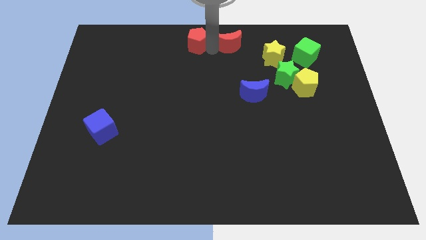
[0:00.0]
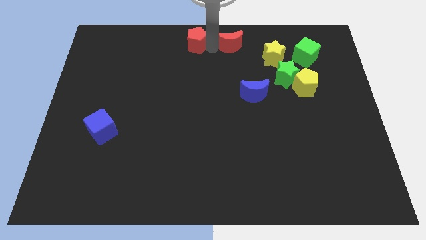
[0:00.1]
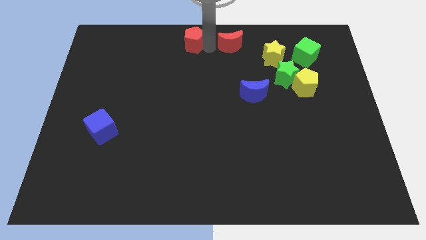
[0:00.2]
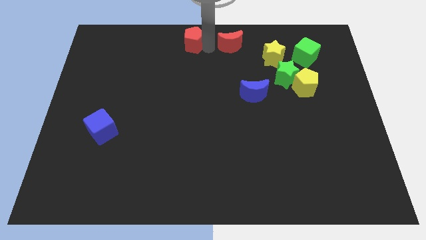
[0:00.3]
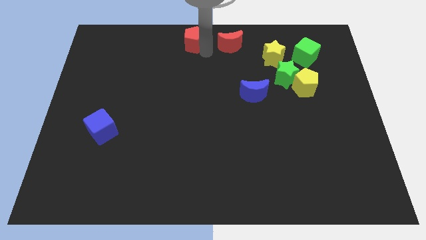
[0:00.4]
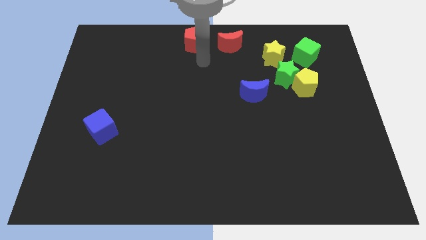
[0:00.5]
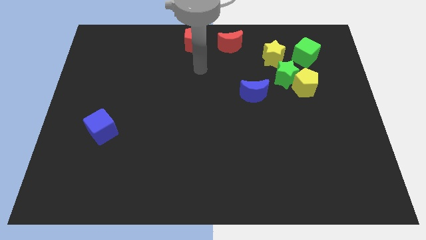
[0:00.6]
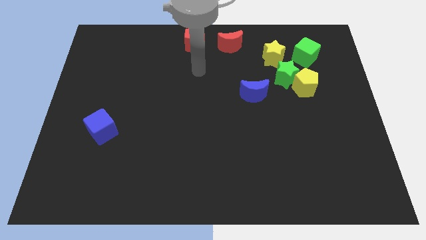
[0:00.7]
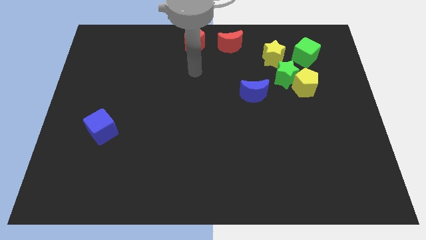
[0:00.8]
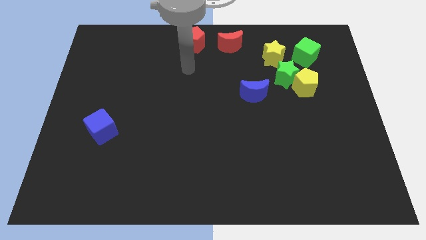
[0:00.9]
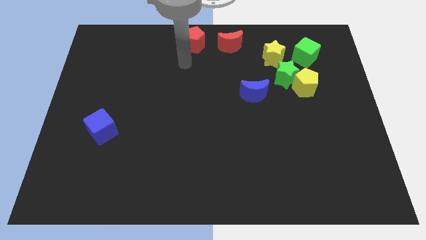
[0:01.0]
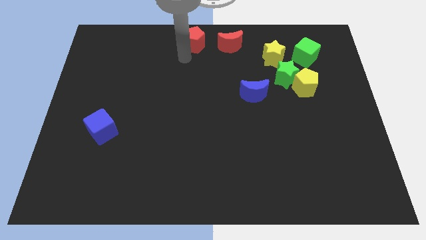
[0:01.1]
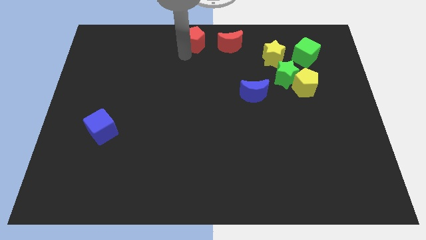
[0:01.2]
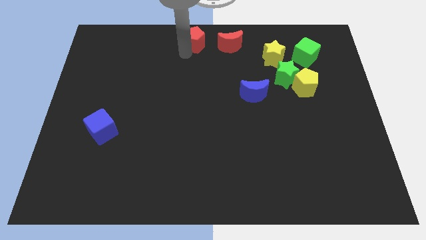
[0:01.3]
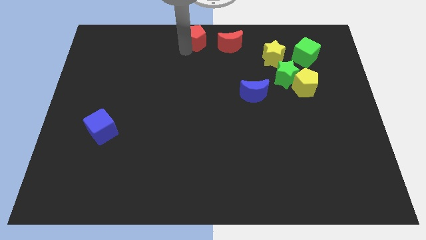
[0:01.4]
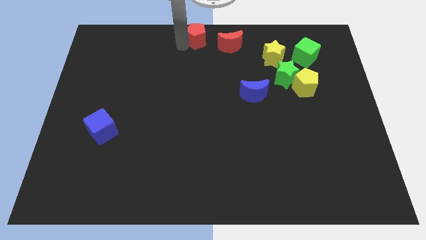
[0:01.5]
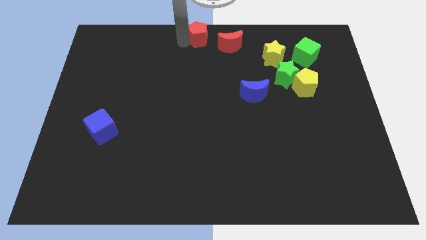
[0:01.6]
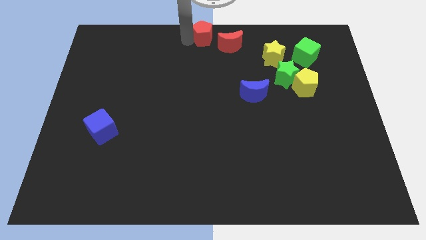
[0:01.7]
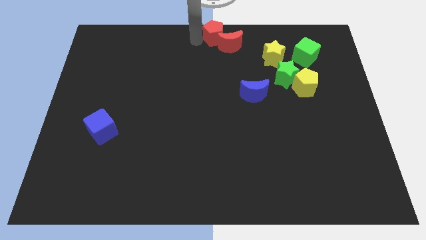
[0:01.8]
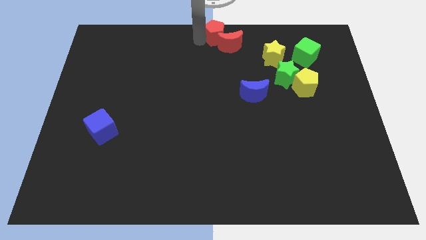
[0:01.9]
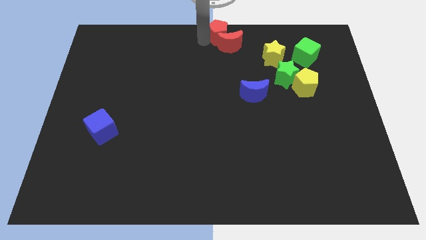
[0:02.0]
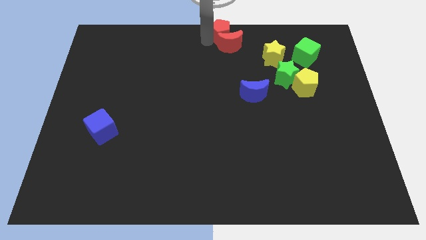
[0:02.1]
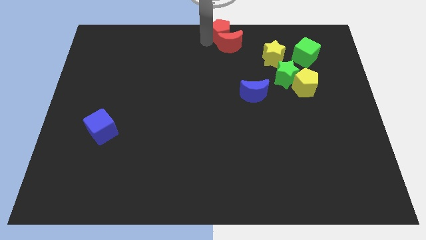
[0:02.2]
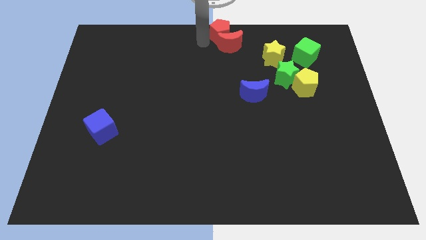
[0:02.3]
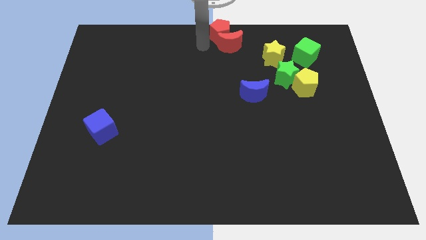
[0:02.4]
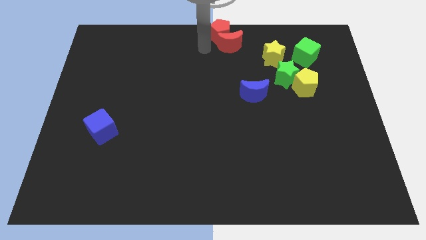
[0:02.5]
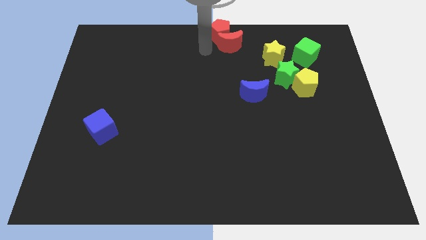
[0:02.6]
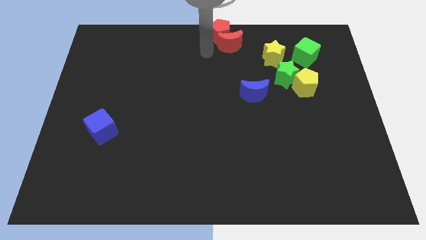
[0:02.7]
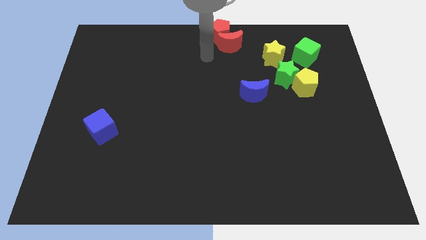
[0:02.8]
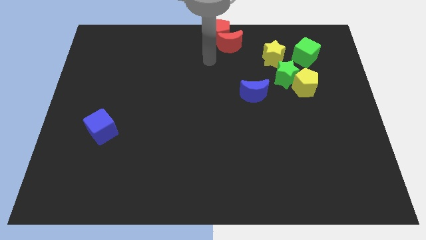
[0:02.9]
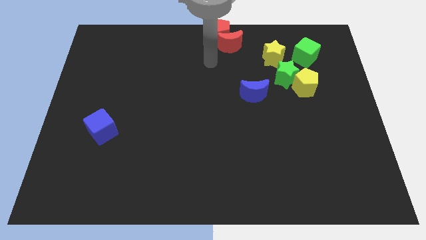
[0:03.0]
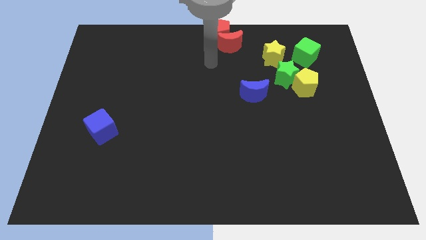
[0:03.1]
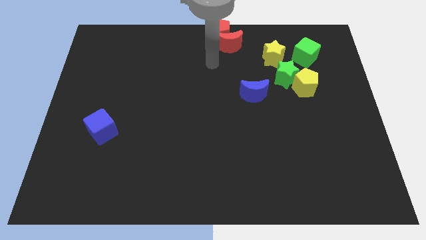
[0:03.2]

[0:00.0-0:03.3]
push the red pentagon to the top side of the red crescent

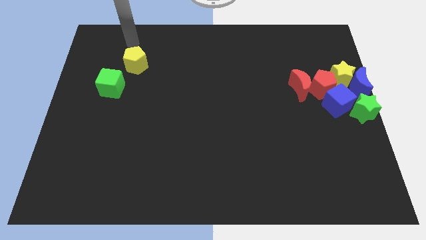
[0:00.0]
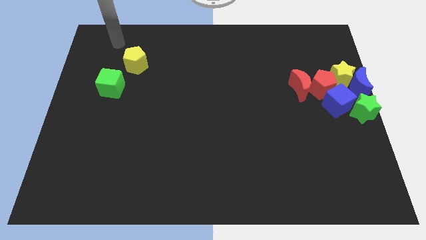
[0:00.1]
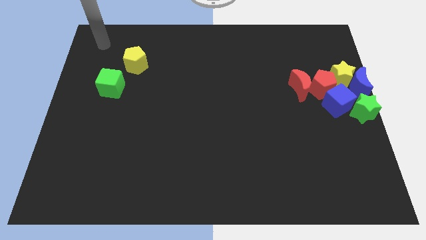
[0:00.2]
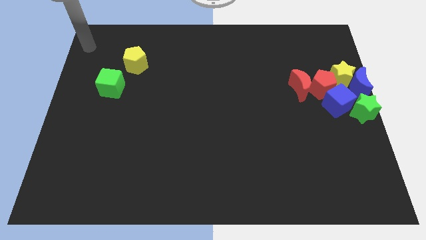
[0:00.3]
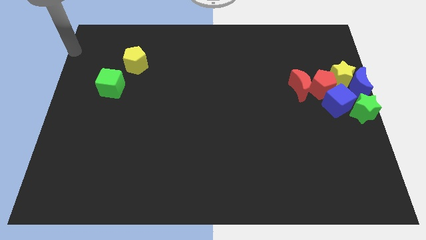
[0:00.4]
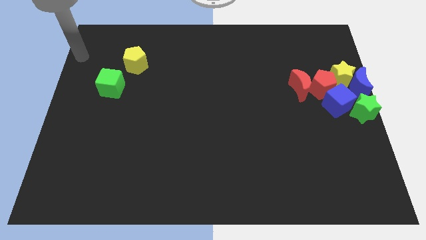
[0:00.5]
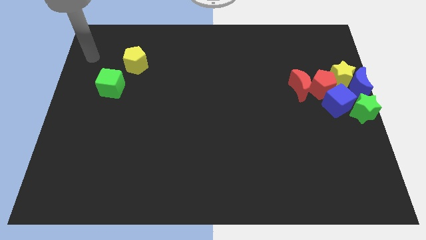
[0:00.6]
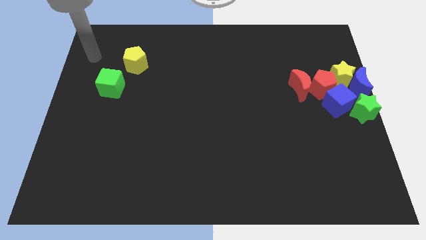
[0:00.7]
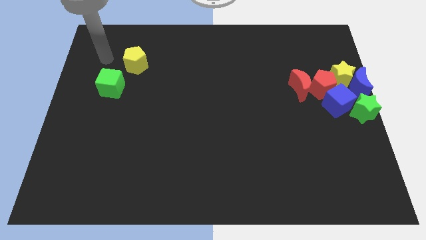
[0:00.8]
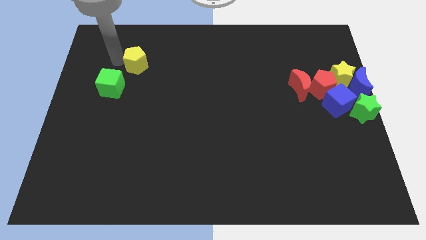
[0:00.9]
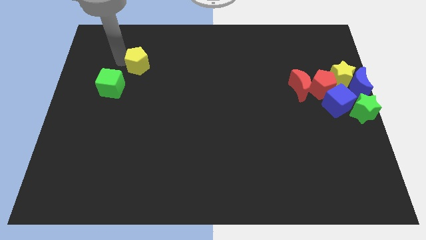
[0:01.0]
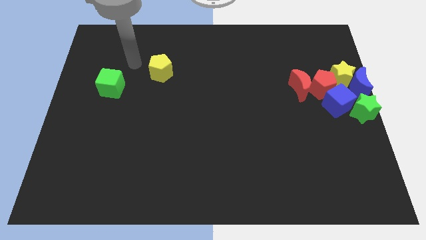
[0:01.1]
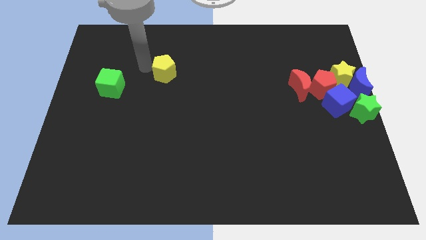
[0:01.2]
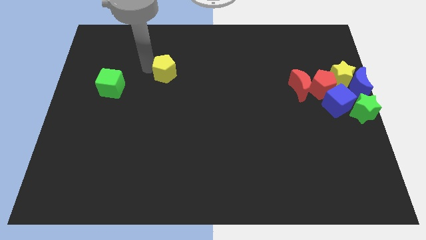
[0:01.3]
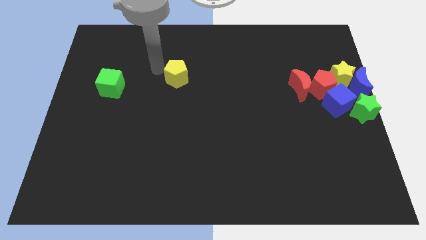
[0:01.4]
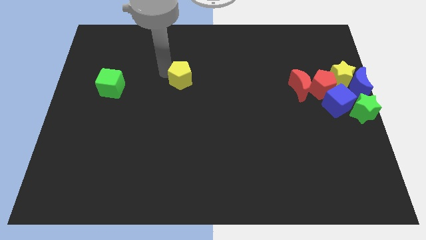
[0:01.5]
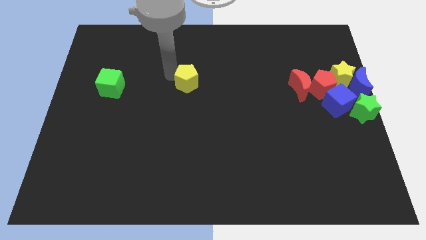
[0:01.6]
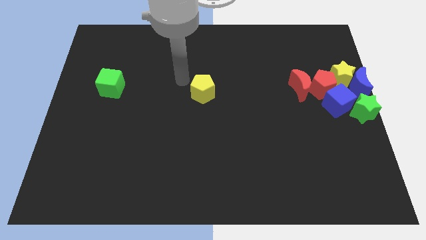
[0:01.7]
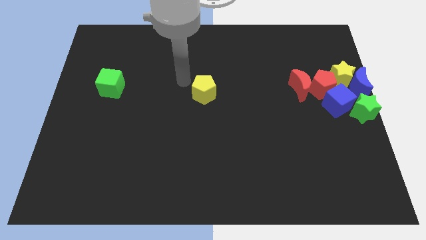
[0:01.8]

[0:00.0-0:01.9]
slide the yellow pentagon to the center of the board

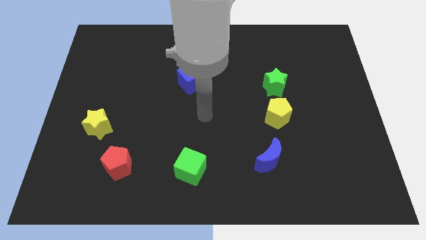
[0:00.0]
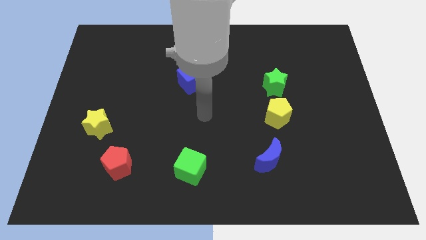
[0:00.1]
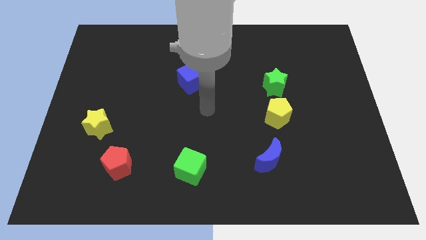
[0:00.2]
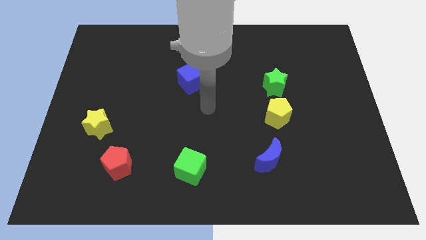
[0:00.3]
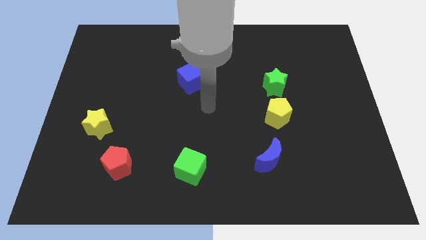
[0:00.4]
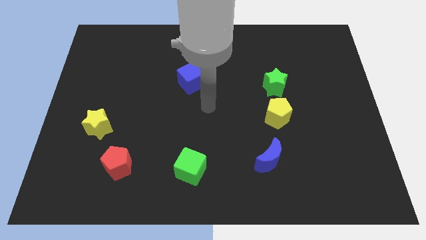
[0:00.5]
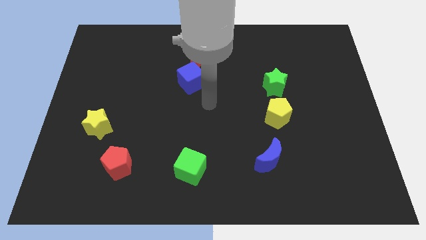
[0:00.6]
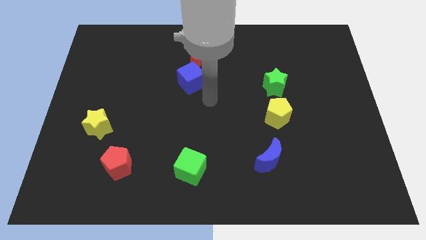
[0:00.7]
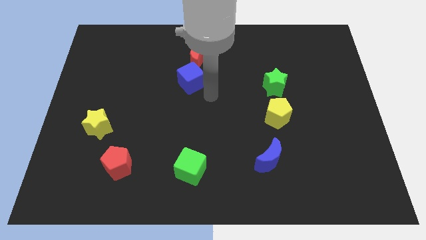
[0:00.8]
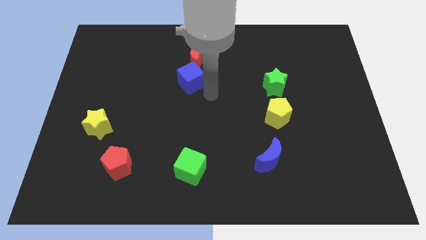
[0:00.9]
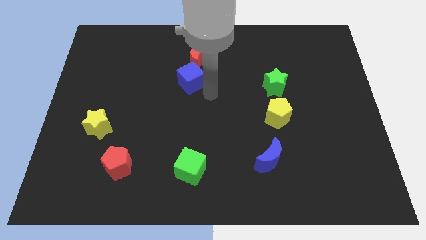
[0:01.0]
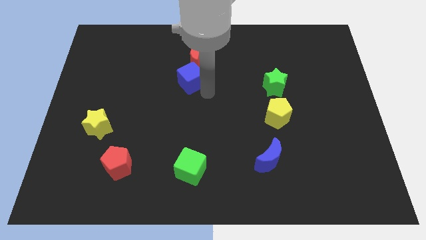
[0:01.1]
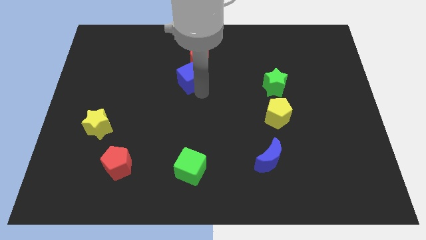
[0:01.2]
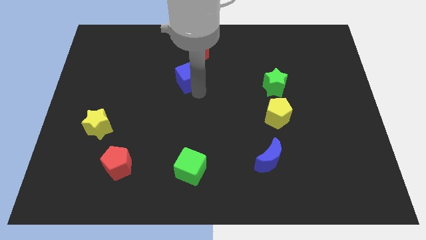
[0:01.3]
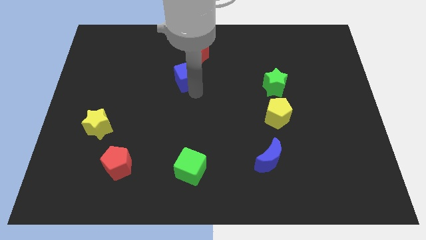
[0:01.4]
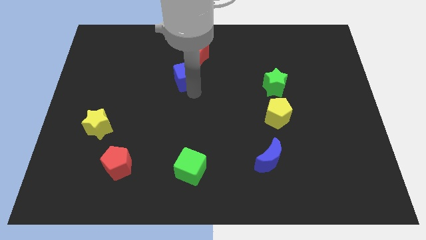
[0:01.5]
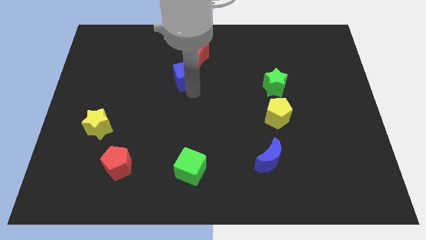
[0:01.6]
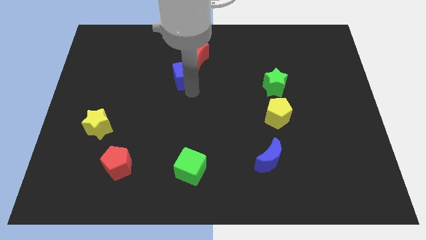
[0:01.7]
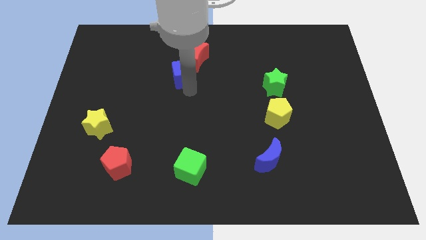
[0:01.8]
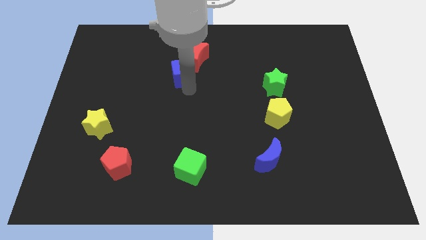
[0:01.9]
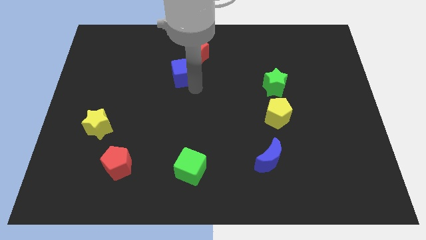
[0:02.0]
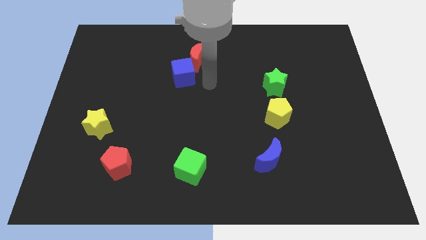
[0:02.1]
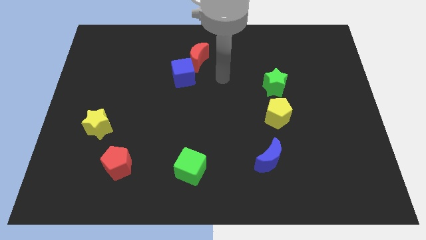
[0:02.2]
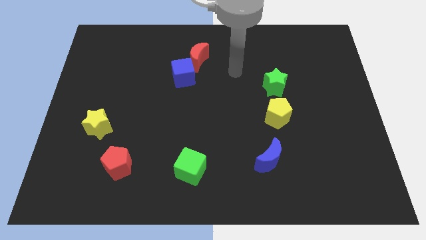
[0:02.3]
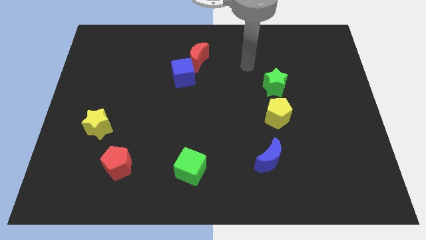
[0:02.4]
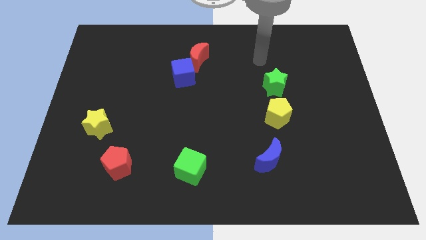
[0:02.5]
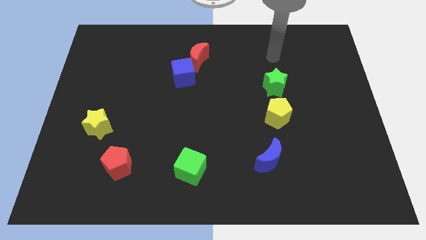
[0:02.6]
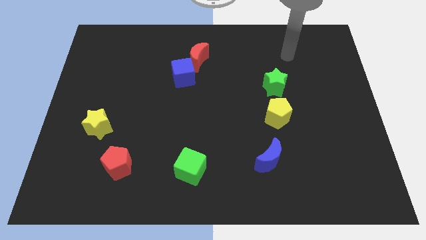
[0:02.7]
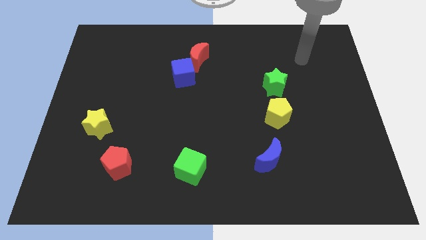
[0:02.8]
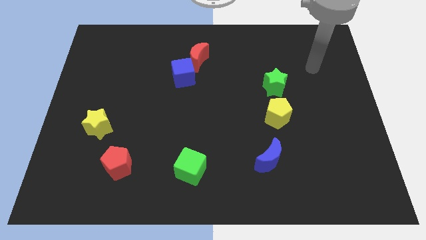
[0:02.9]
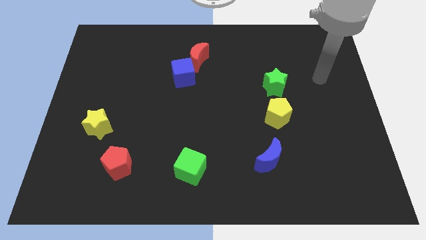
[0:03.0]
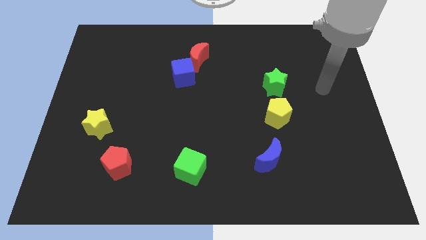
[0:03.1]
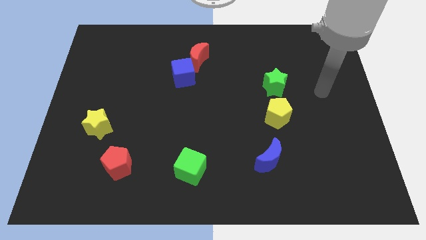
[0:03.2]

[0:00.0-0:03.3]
move blue cube slightly into red crescent

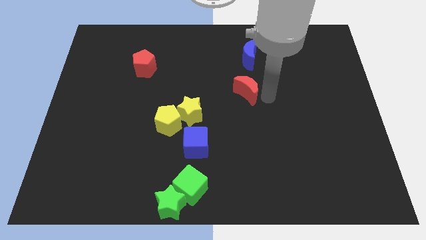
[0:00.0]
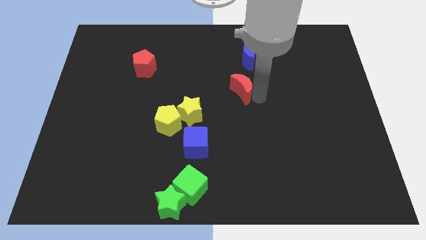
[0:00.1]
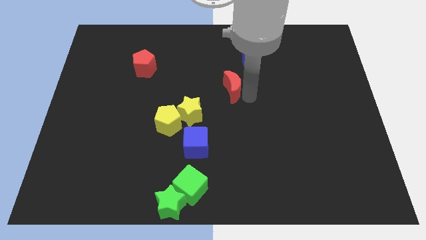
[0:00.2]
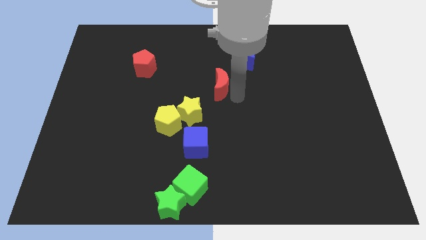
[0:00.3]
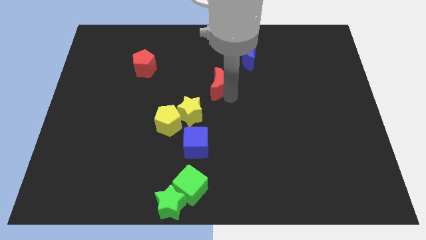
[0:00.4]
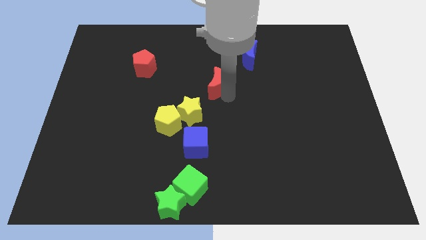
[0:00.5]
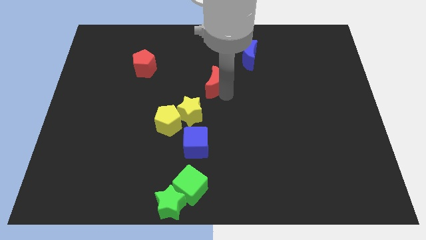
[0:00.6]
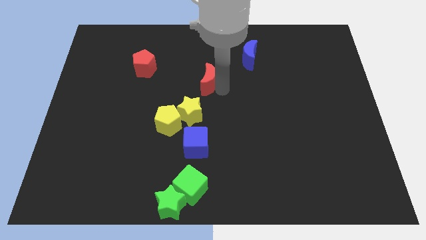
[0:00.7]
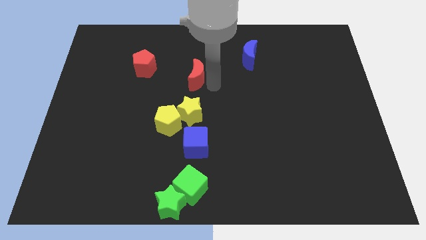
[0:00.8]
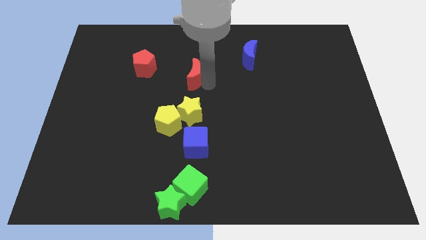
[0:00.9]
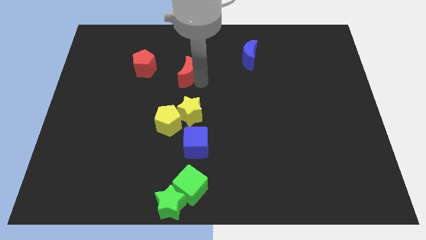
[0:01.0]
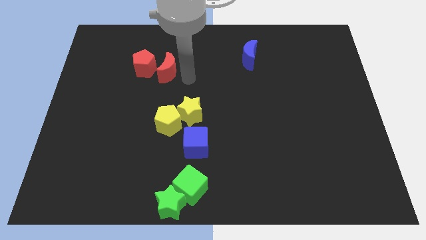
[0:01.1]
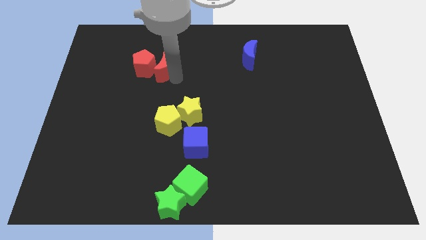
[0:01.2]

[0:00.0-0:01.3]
put the red crescent in line above the yellow pentagon
